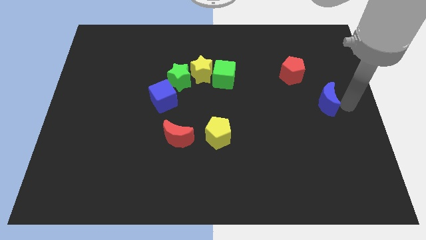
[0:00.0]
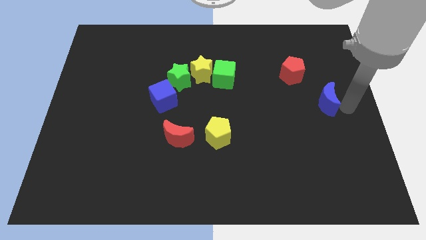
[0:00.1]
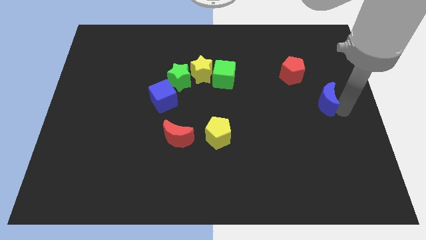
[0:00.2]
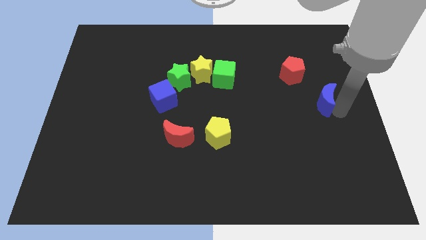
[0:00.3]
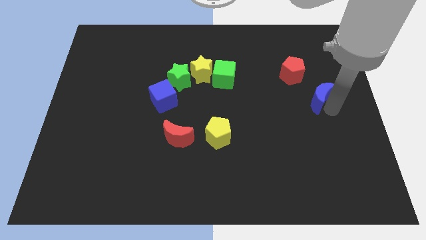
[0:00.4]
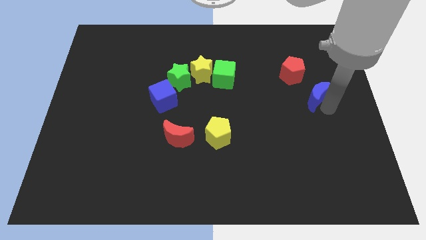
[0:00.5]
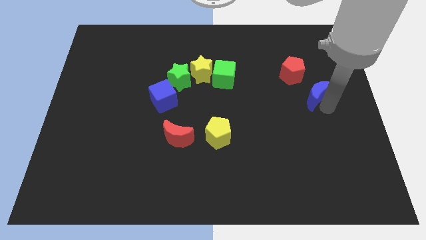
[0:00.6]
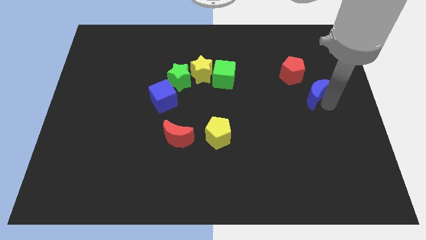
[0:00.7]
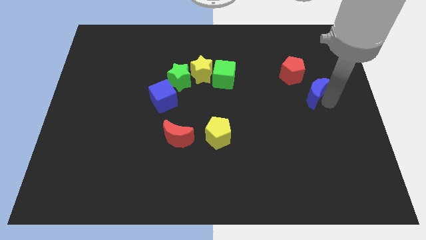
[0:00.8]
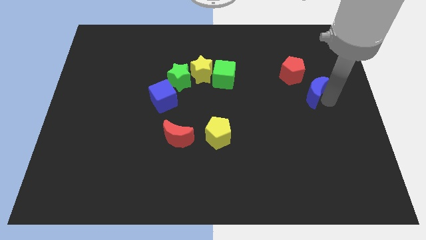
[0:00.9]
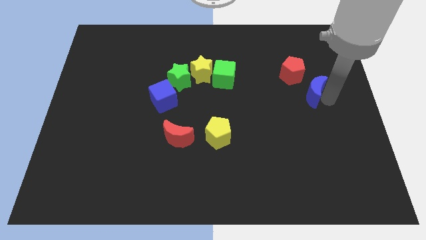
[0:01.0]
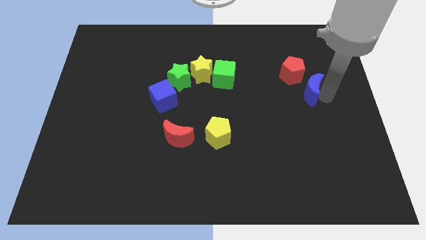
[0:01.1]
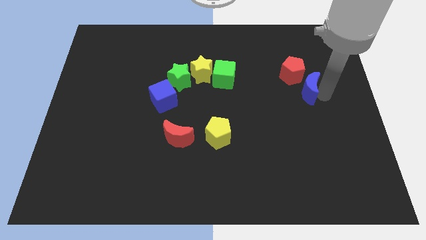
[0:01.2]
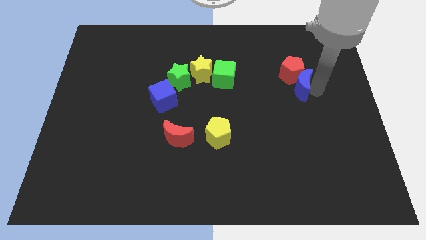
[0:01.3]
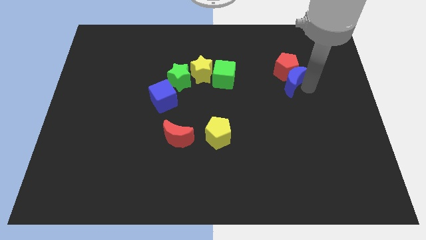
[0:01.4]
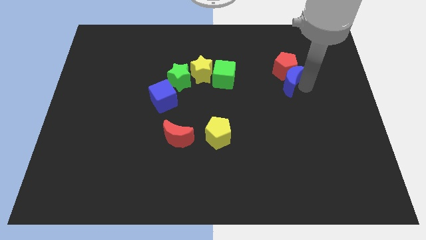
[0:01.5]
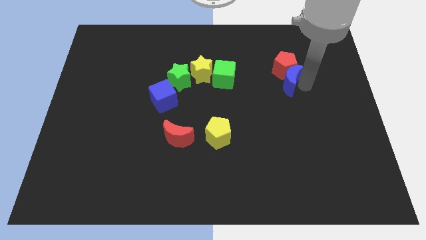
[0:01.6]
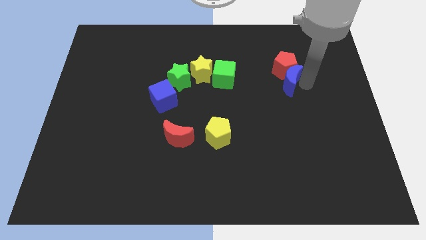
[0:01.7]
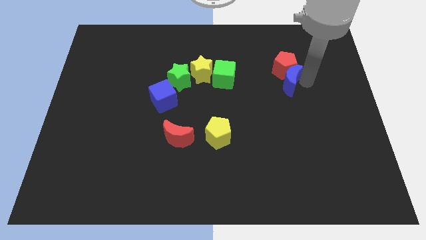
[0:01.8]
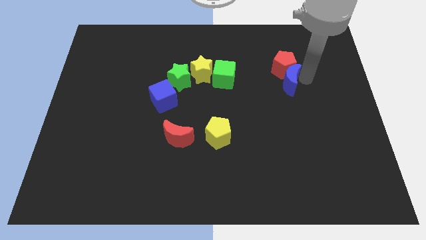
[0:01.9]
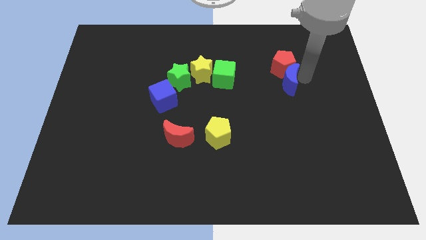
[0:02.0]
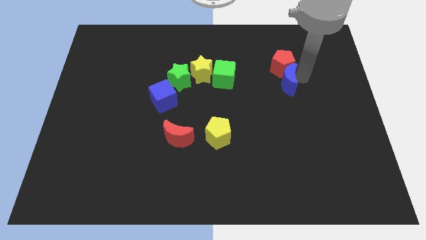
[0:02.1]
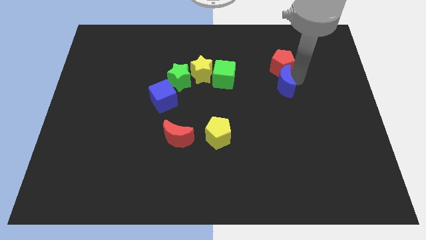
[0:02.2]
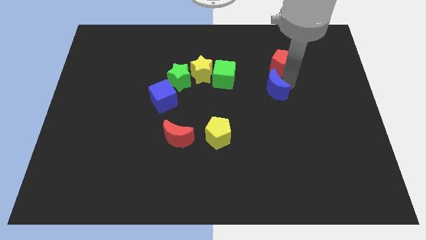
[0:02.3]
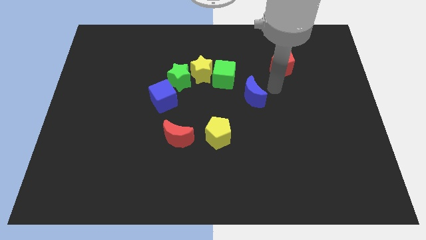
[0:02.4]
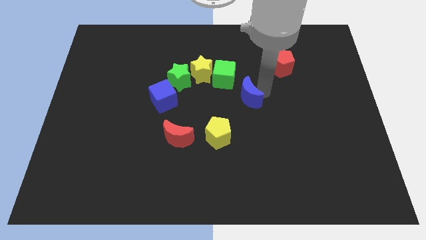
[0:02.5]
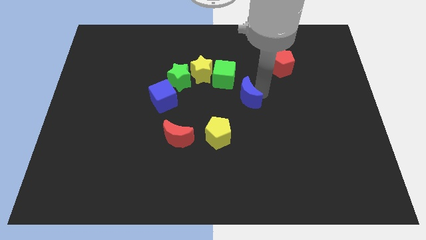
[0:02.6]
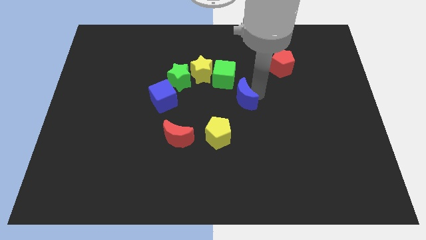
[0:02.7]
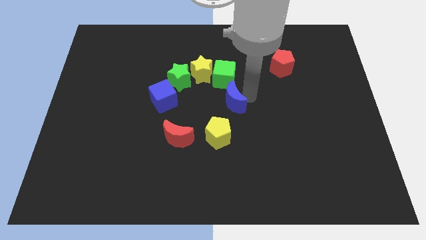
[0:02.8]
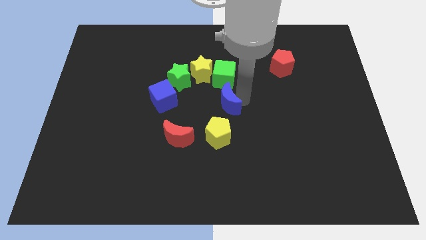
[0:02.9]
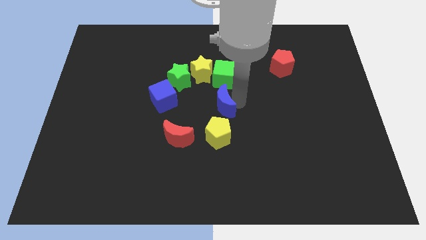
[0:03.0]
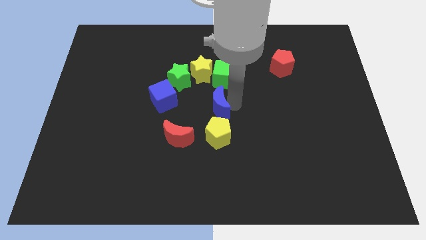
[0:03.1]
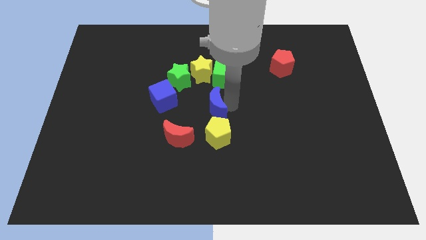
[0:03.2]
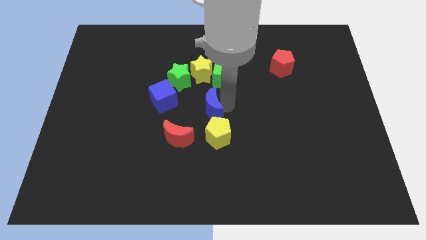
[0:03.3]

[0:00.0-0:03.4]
place the blue moon top side the yellow pentagon

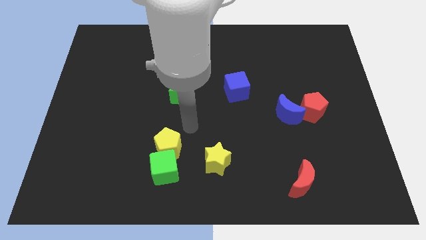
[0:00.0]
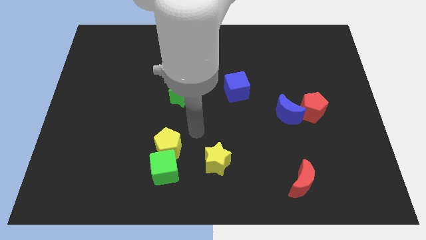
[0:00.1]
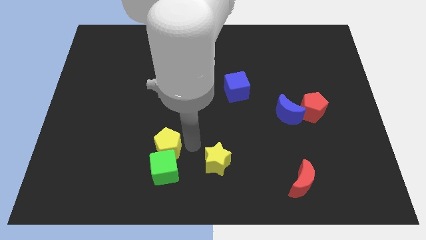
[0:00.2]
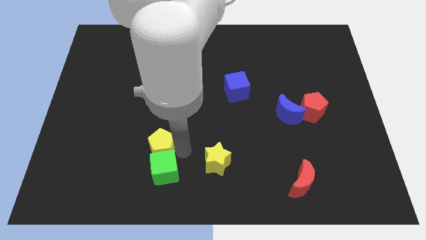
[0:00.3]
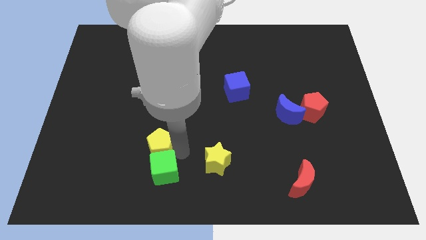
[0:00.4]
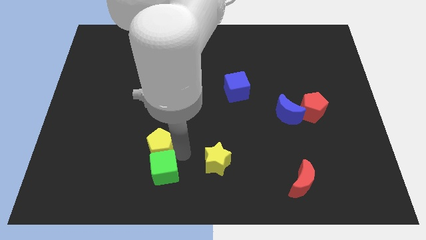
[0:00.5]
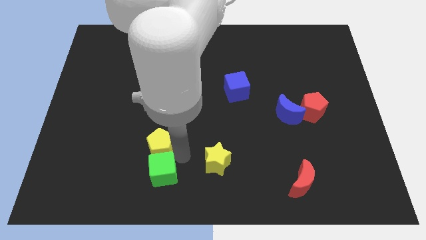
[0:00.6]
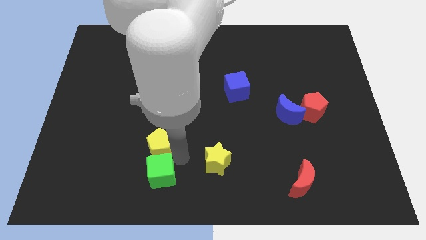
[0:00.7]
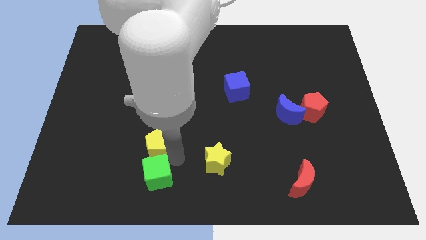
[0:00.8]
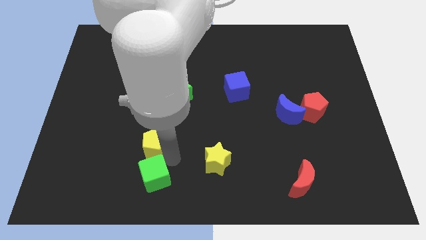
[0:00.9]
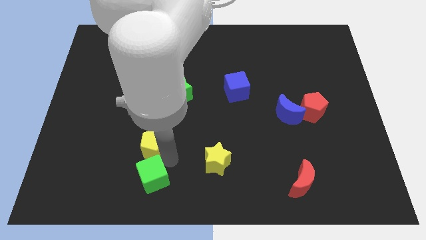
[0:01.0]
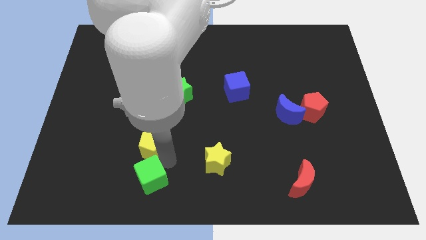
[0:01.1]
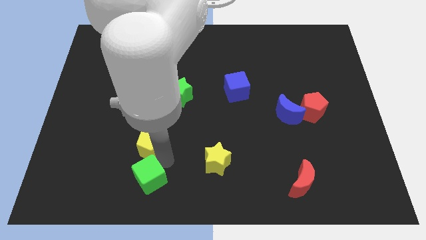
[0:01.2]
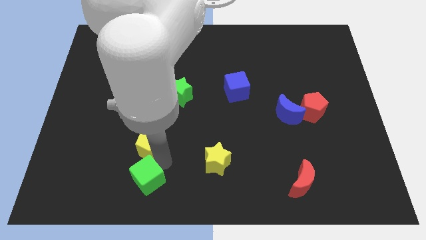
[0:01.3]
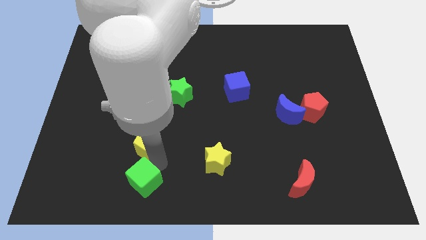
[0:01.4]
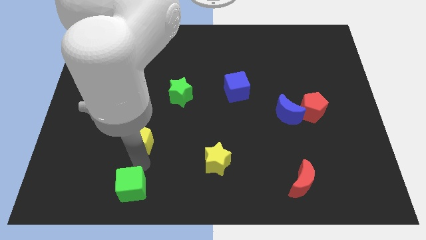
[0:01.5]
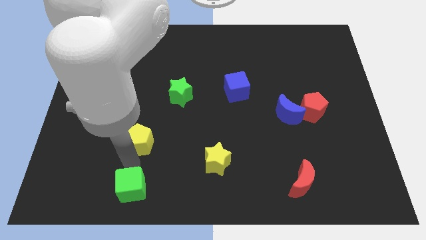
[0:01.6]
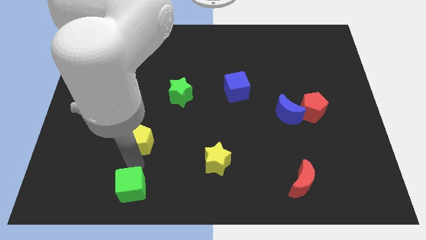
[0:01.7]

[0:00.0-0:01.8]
separate the green cube and the yellow pentagon

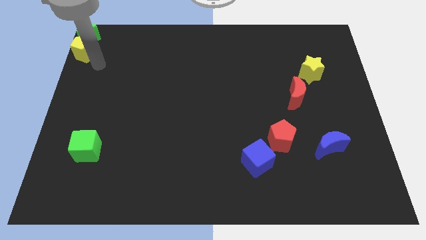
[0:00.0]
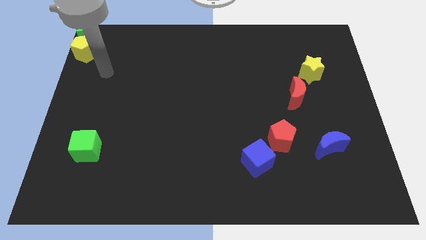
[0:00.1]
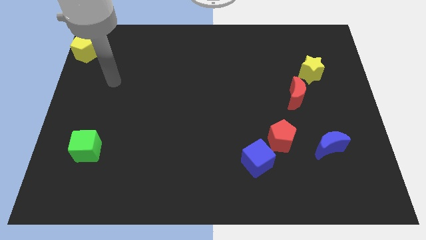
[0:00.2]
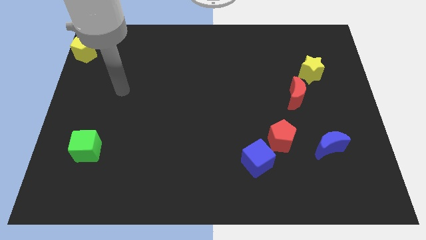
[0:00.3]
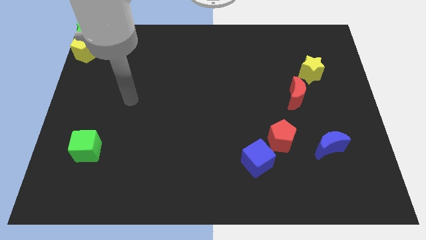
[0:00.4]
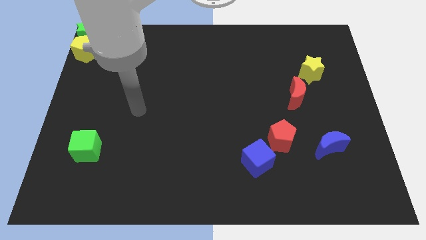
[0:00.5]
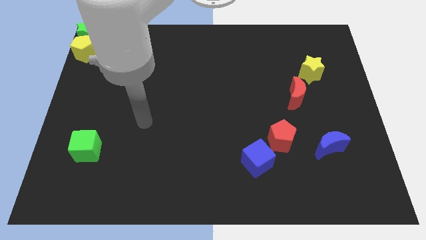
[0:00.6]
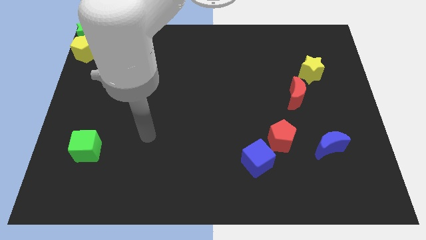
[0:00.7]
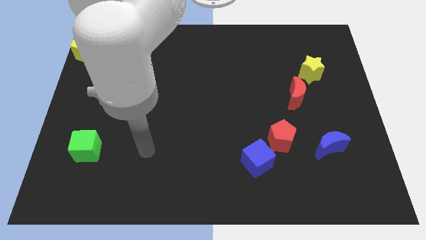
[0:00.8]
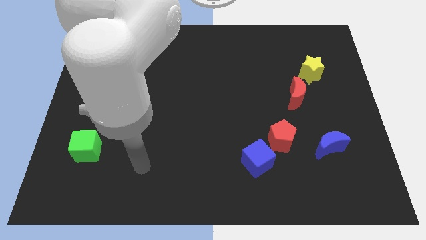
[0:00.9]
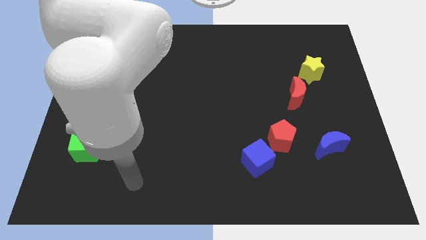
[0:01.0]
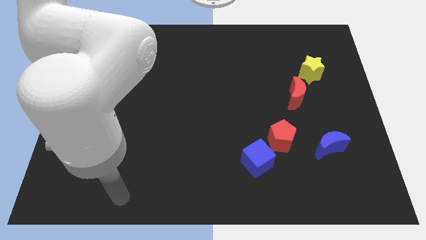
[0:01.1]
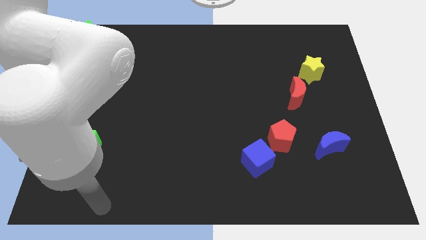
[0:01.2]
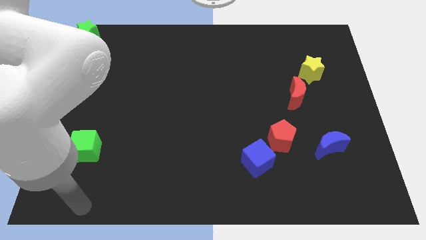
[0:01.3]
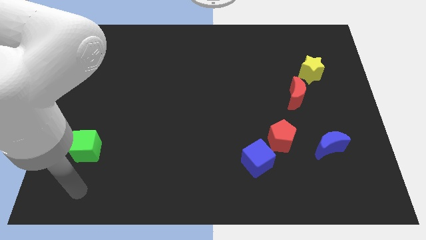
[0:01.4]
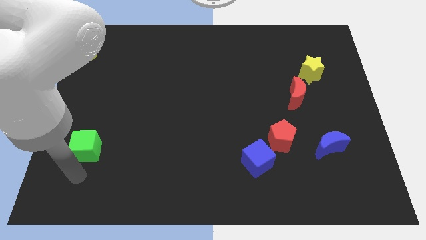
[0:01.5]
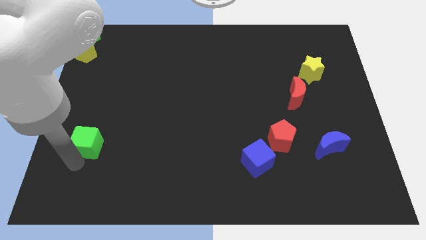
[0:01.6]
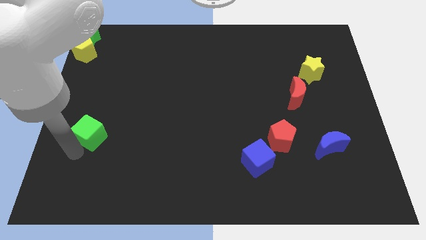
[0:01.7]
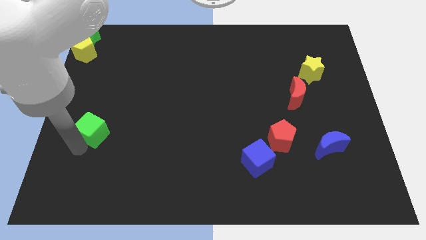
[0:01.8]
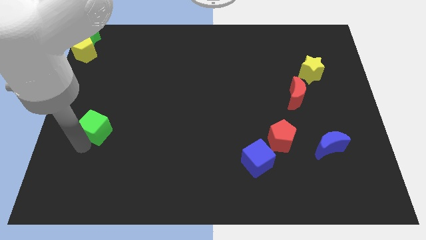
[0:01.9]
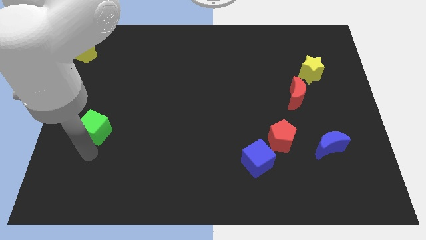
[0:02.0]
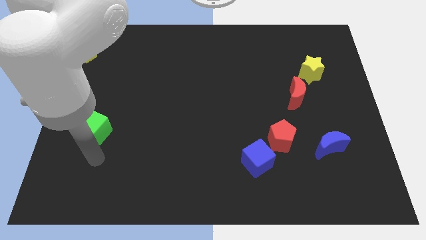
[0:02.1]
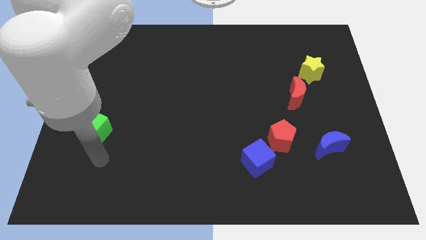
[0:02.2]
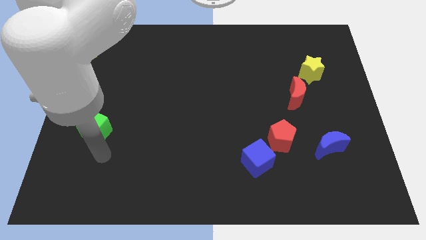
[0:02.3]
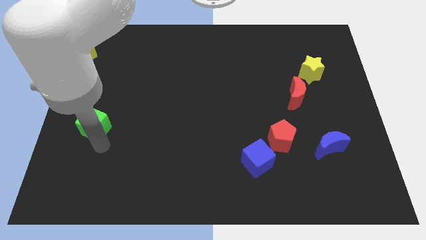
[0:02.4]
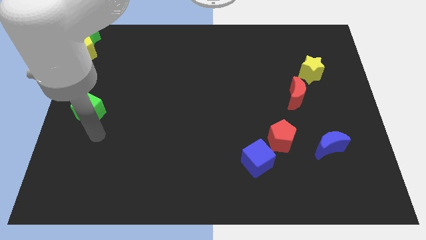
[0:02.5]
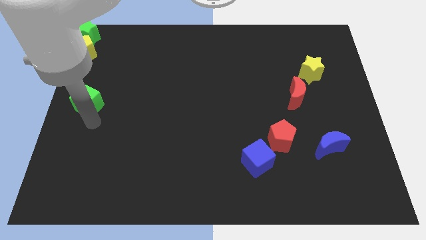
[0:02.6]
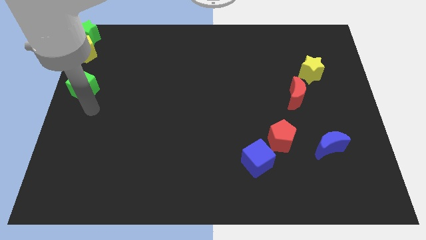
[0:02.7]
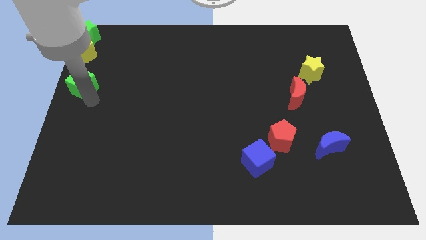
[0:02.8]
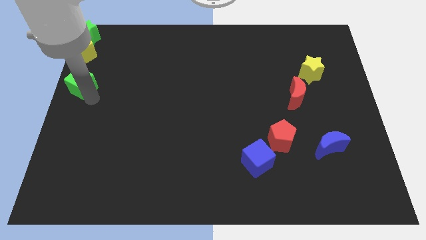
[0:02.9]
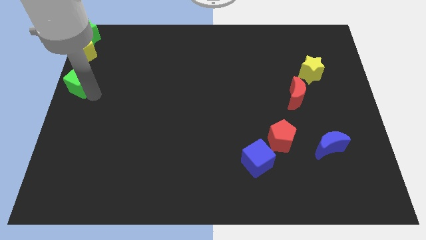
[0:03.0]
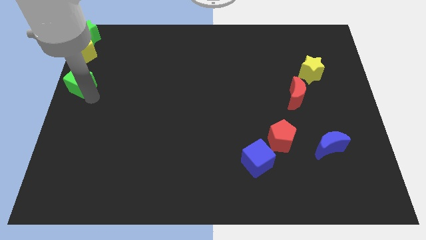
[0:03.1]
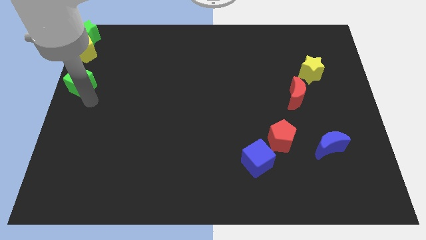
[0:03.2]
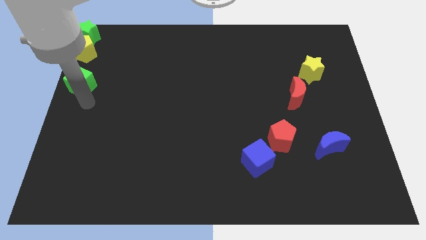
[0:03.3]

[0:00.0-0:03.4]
move green cube towards yellow pentagon

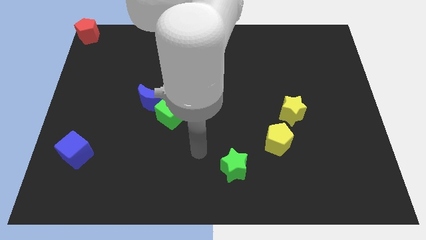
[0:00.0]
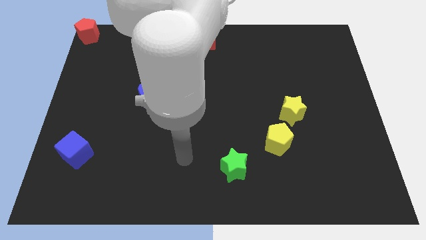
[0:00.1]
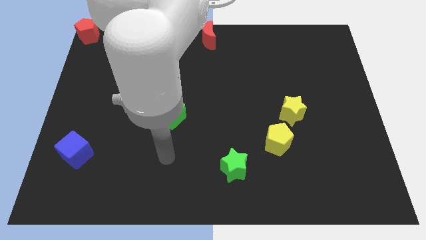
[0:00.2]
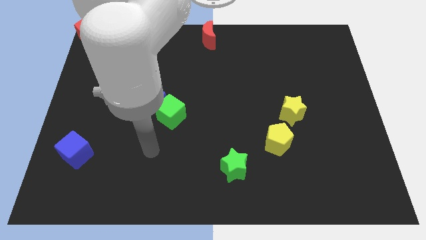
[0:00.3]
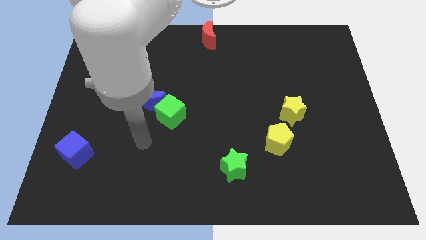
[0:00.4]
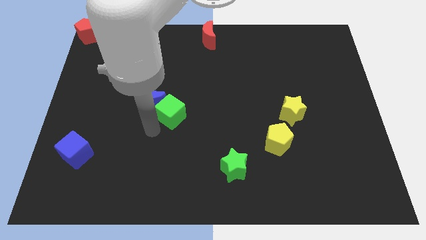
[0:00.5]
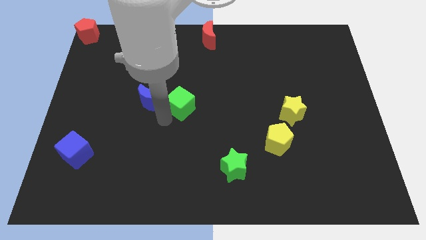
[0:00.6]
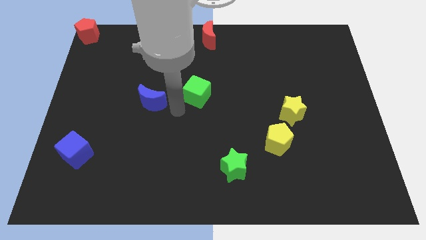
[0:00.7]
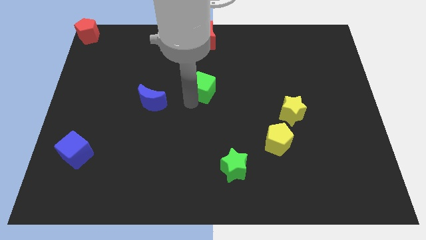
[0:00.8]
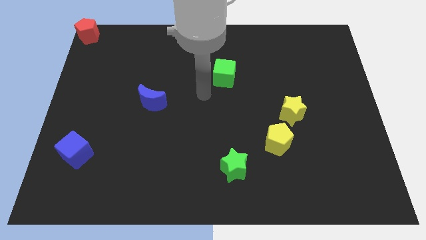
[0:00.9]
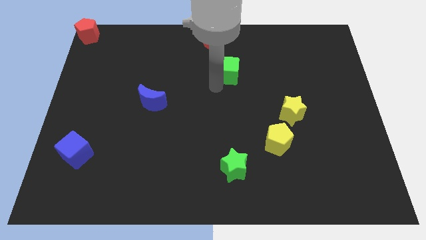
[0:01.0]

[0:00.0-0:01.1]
move the green cube away from the blue crescent
